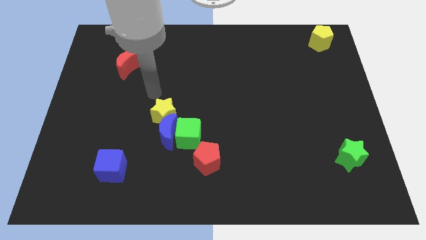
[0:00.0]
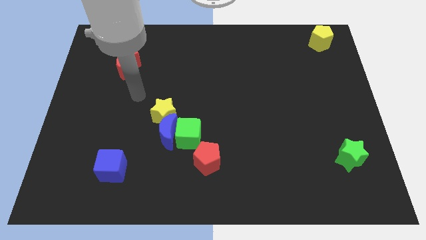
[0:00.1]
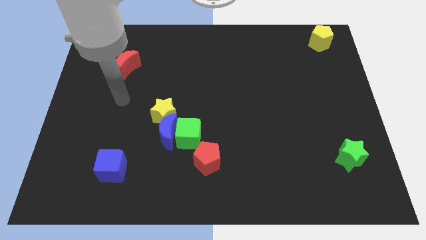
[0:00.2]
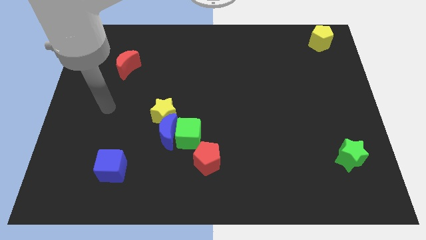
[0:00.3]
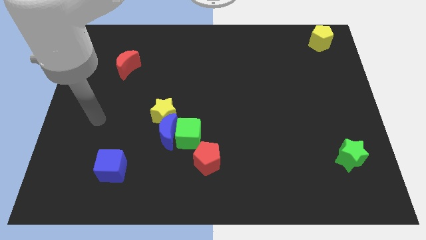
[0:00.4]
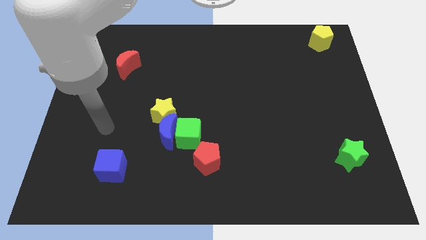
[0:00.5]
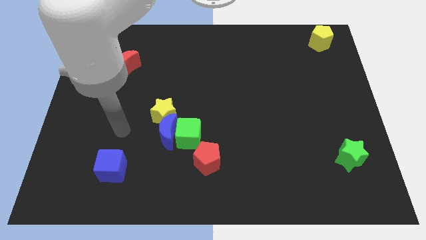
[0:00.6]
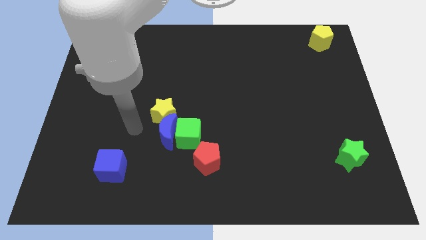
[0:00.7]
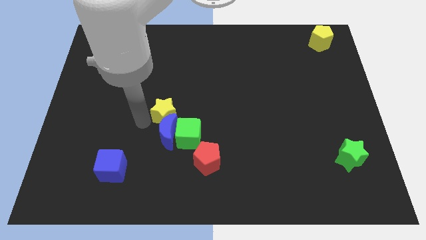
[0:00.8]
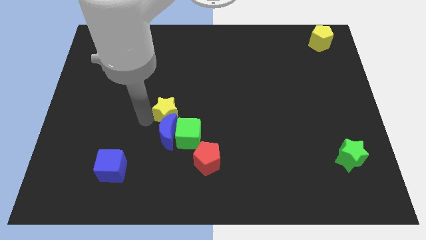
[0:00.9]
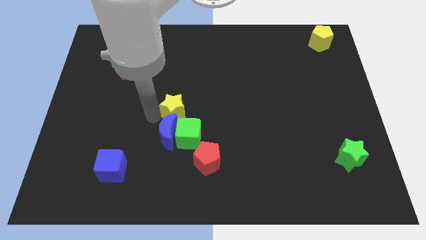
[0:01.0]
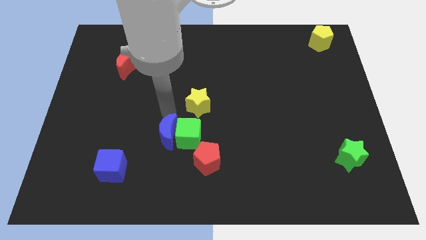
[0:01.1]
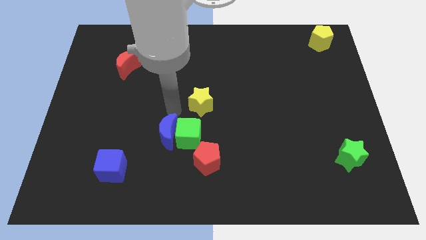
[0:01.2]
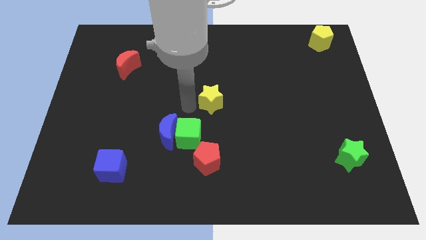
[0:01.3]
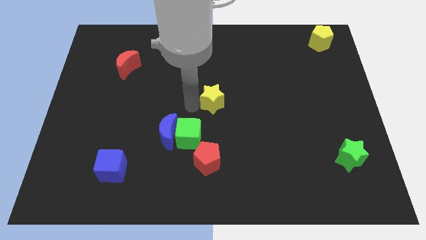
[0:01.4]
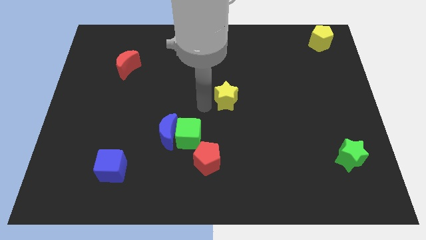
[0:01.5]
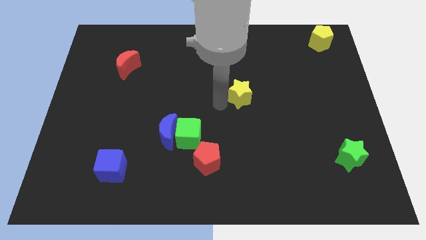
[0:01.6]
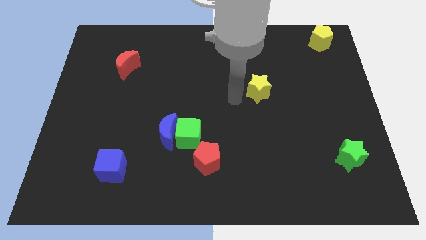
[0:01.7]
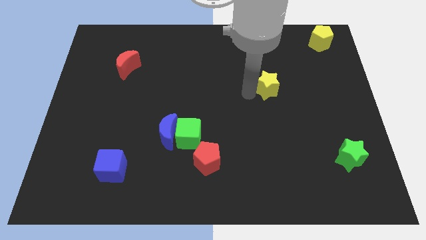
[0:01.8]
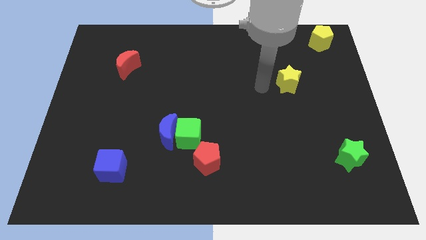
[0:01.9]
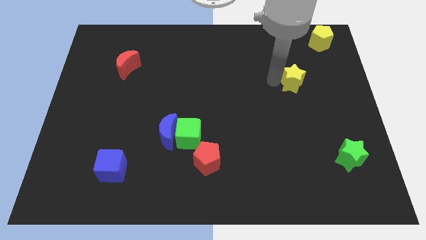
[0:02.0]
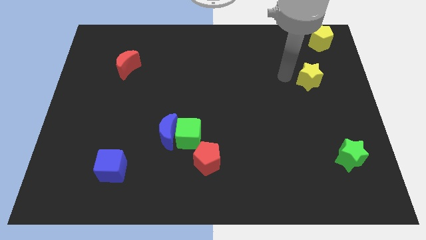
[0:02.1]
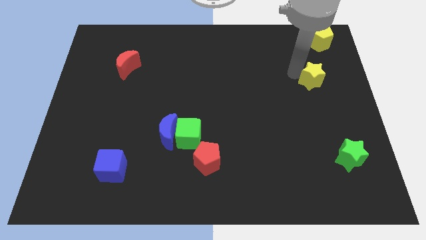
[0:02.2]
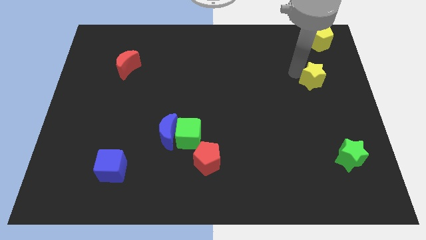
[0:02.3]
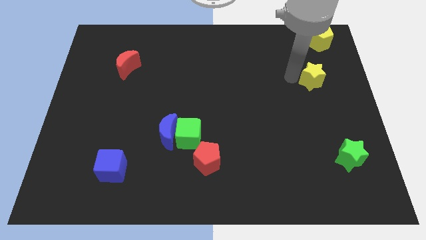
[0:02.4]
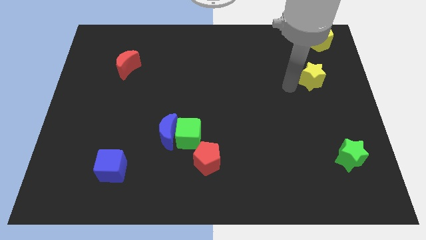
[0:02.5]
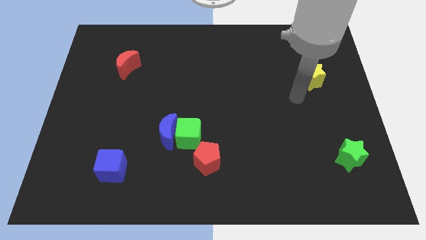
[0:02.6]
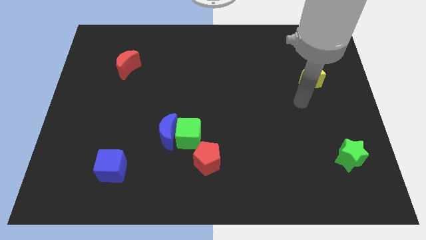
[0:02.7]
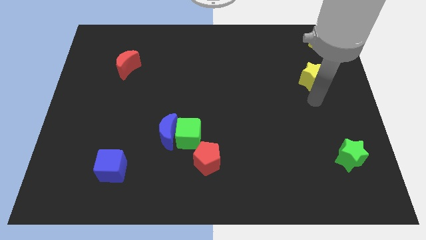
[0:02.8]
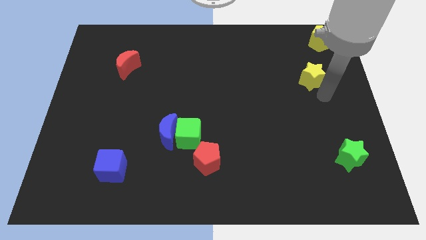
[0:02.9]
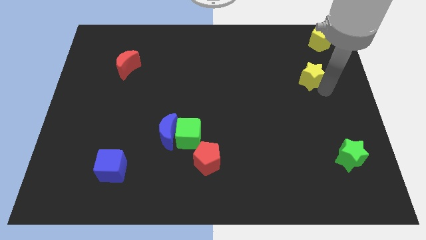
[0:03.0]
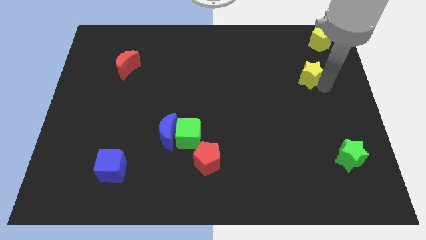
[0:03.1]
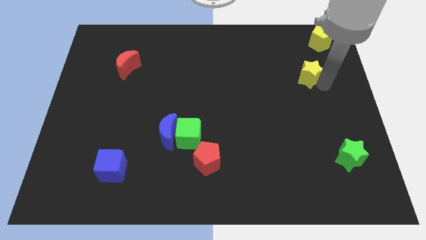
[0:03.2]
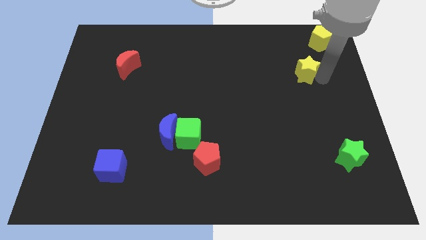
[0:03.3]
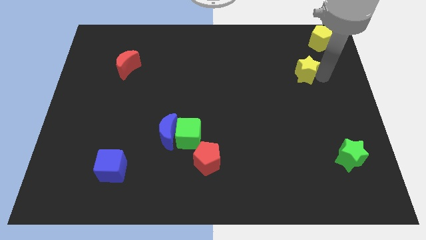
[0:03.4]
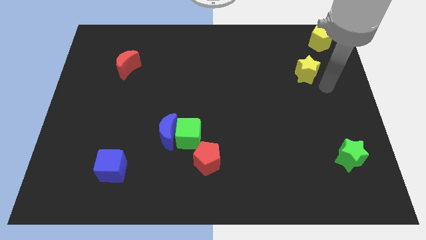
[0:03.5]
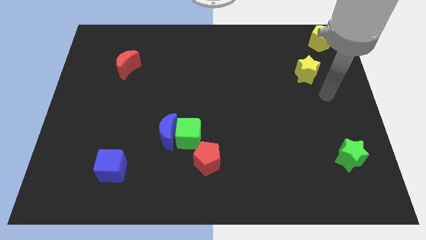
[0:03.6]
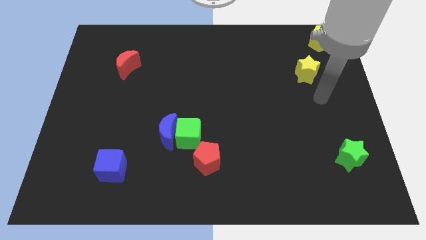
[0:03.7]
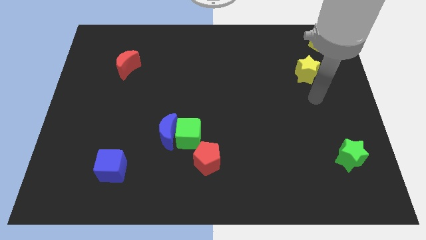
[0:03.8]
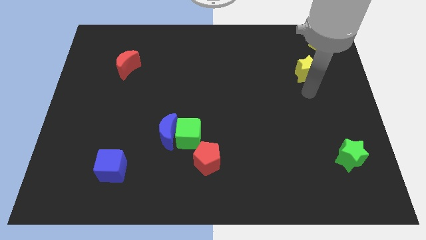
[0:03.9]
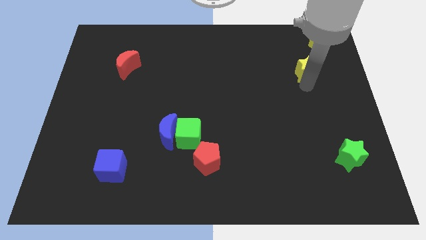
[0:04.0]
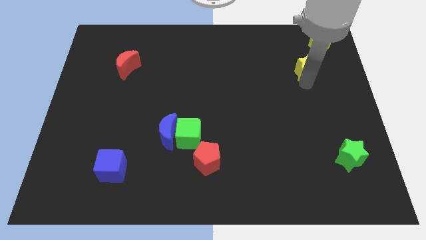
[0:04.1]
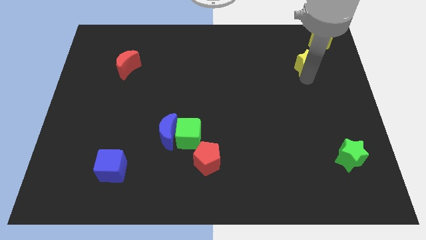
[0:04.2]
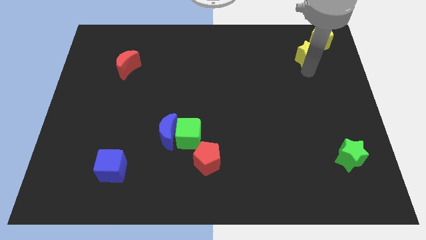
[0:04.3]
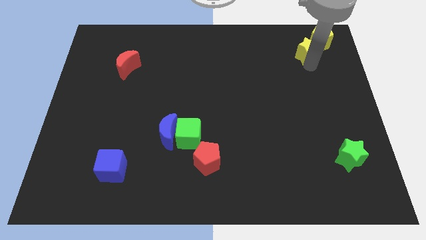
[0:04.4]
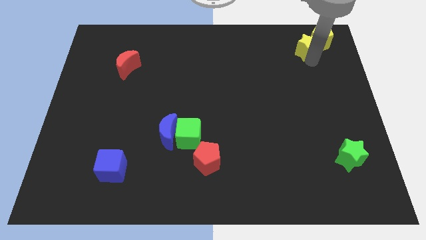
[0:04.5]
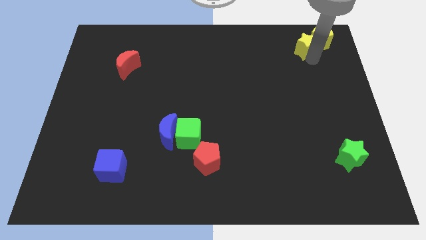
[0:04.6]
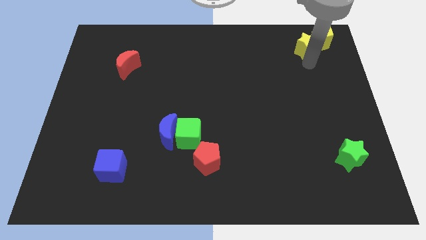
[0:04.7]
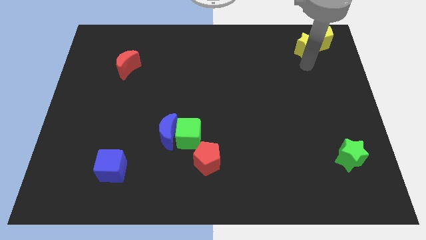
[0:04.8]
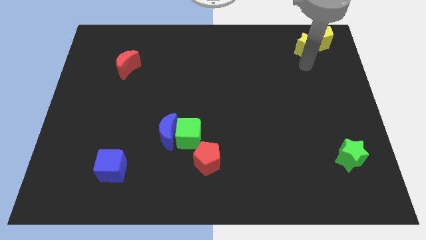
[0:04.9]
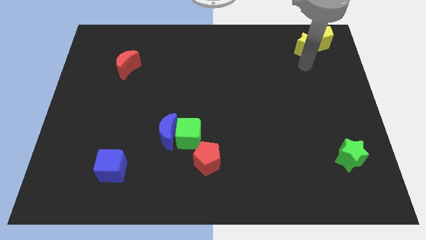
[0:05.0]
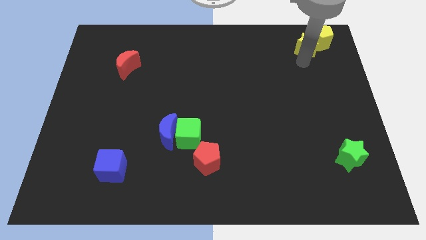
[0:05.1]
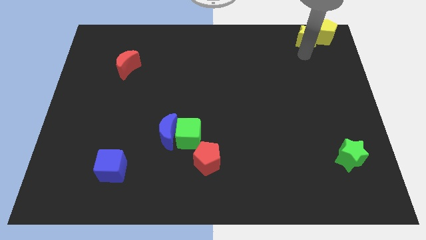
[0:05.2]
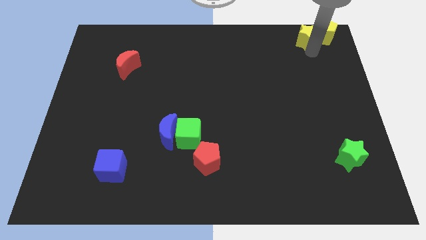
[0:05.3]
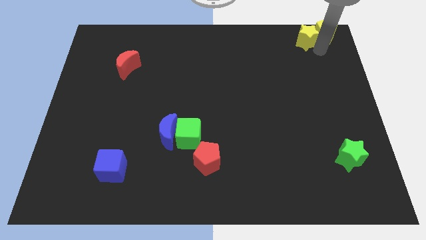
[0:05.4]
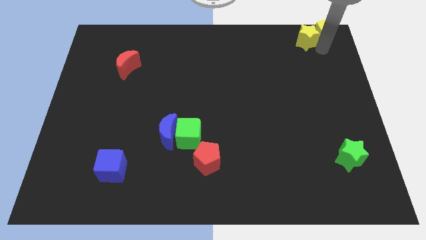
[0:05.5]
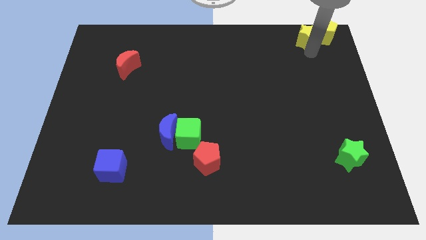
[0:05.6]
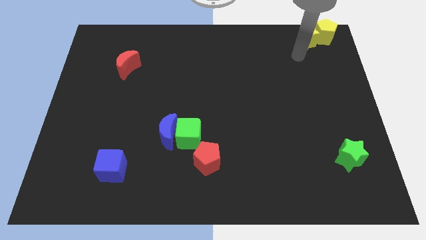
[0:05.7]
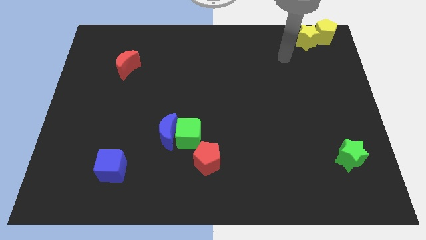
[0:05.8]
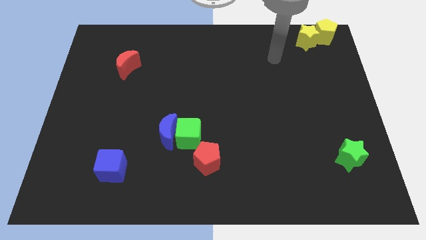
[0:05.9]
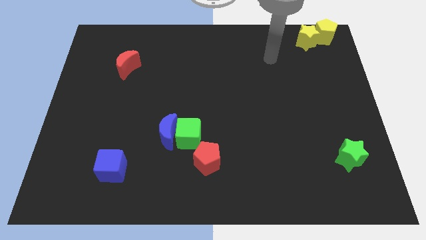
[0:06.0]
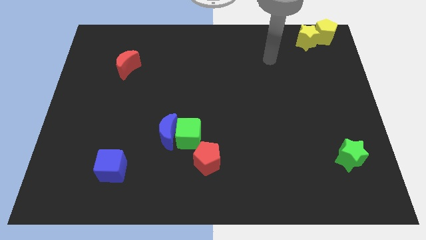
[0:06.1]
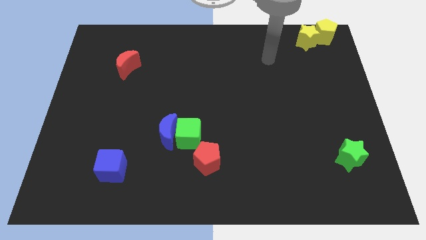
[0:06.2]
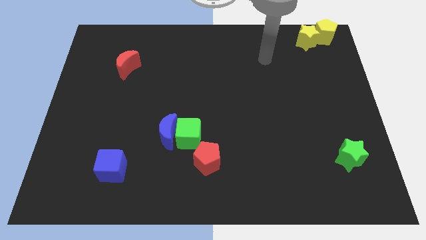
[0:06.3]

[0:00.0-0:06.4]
place the yellow star to the left of the yellow pentagon

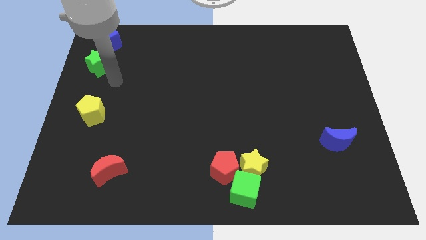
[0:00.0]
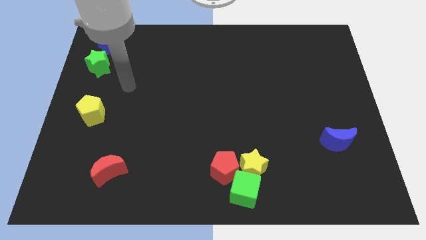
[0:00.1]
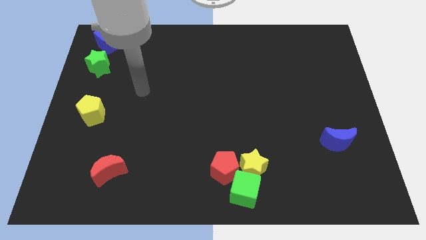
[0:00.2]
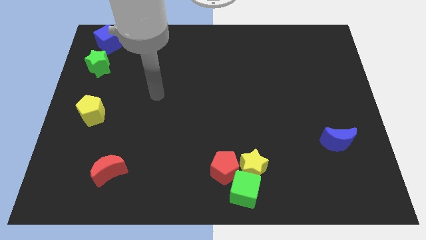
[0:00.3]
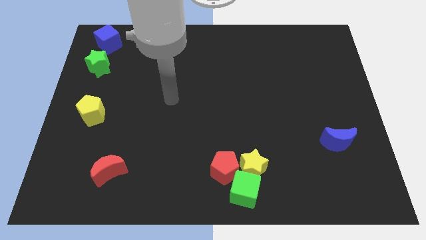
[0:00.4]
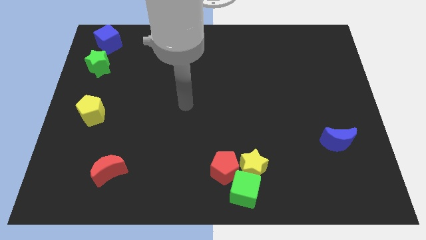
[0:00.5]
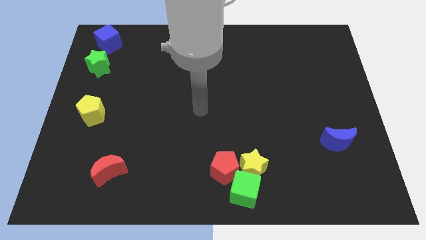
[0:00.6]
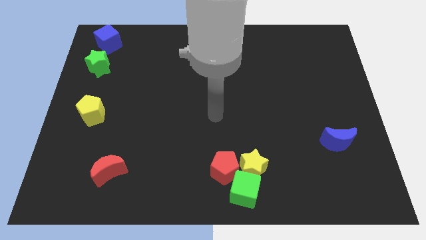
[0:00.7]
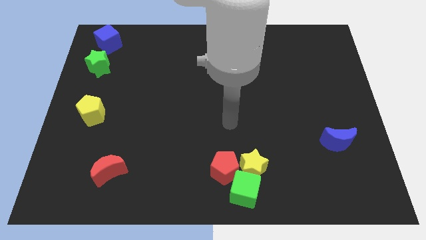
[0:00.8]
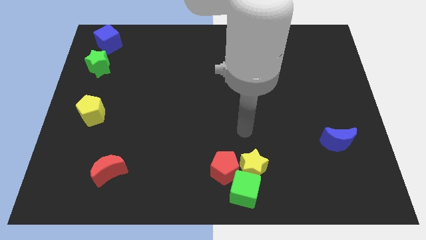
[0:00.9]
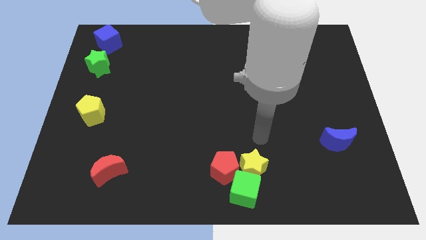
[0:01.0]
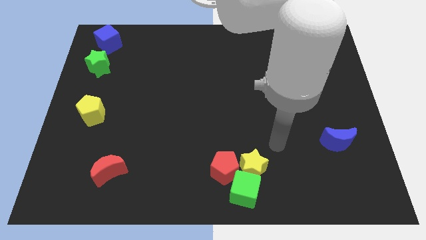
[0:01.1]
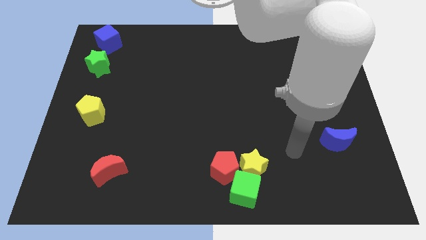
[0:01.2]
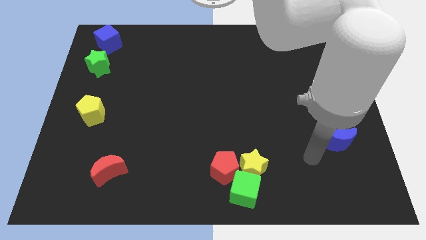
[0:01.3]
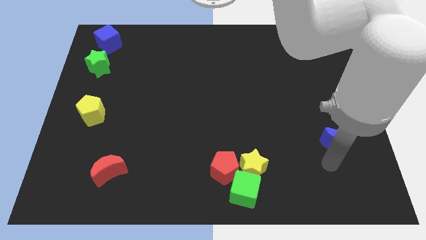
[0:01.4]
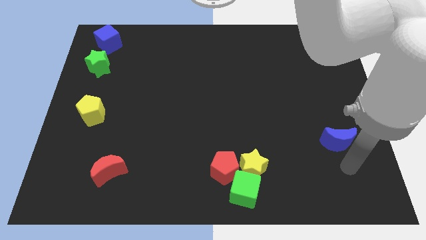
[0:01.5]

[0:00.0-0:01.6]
move your arm away from the green star

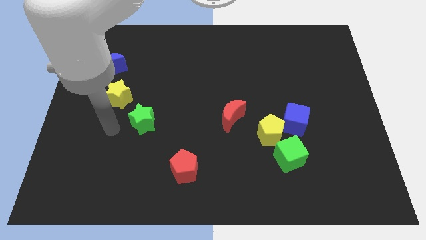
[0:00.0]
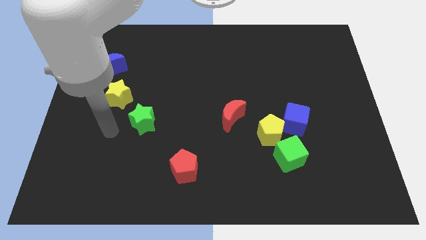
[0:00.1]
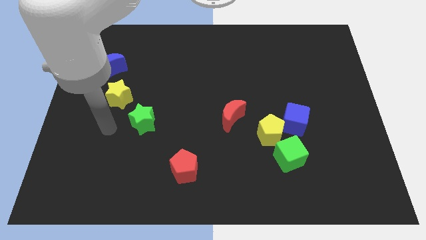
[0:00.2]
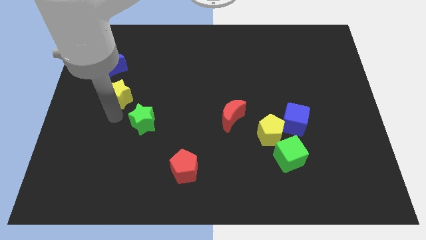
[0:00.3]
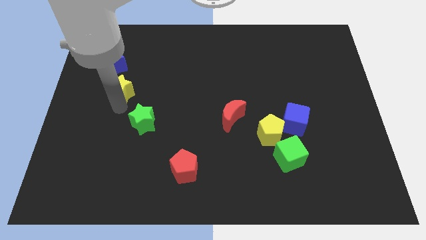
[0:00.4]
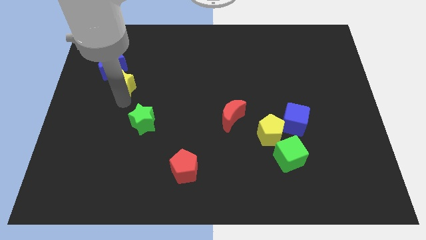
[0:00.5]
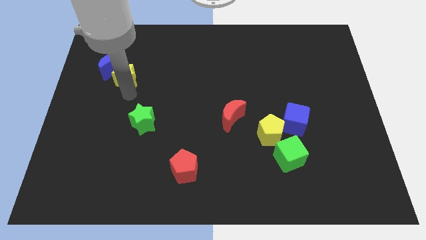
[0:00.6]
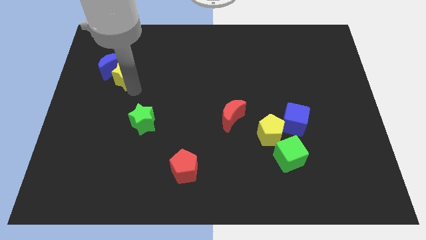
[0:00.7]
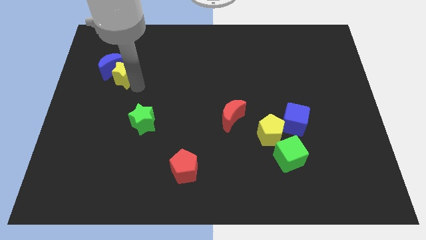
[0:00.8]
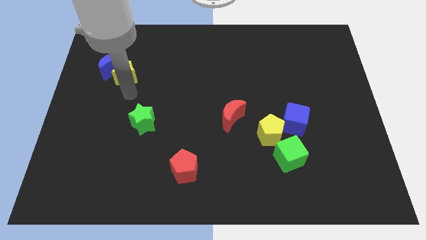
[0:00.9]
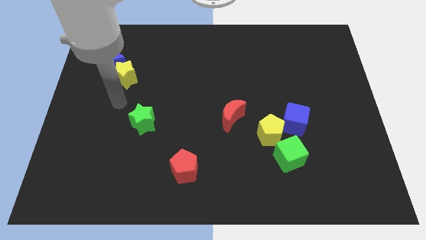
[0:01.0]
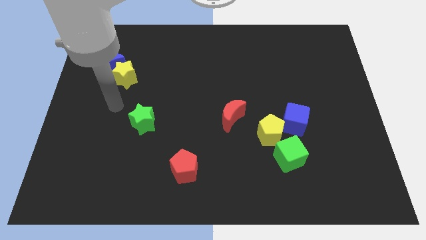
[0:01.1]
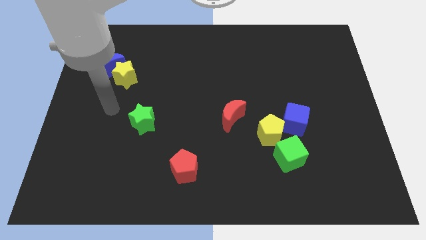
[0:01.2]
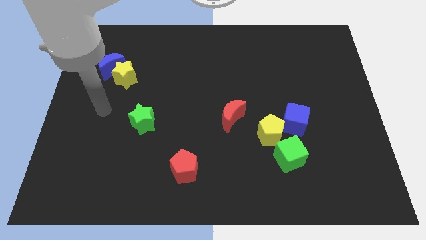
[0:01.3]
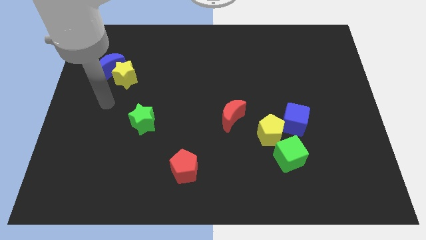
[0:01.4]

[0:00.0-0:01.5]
move the yellow star towards the blue crescent
